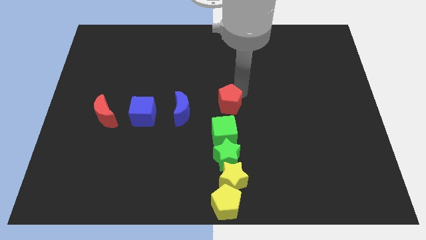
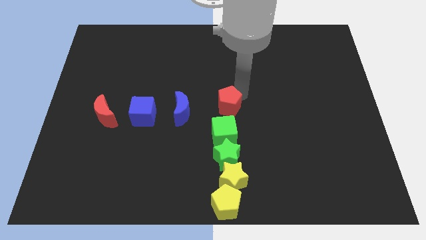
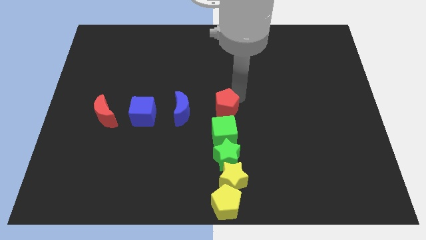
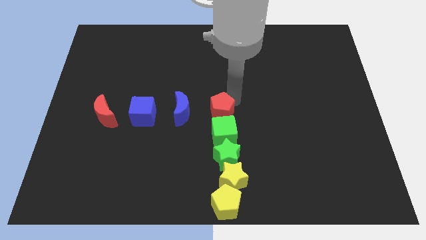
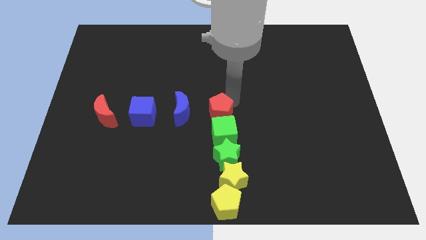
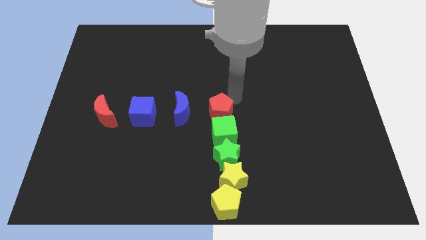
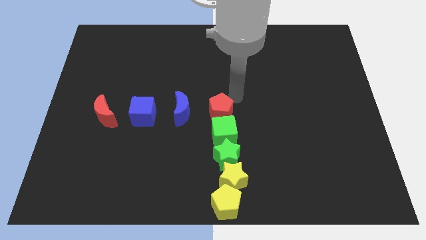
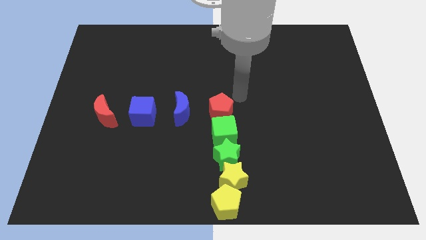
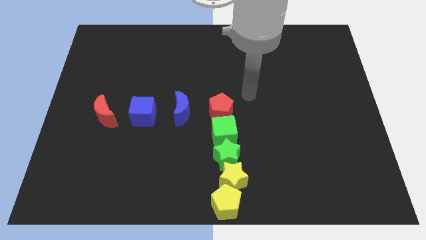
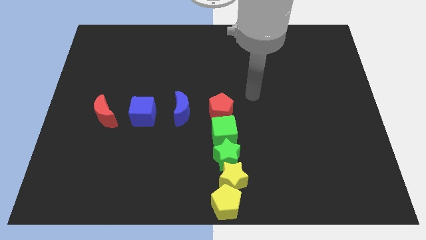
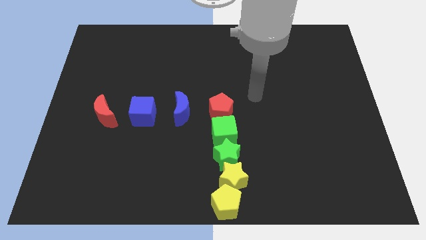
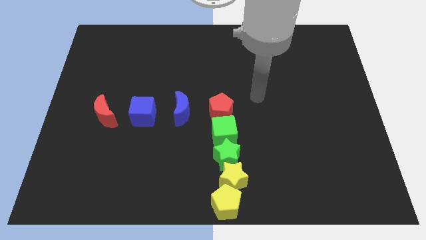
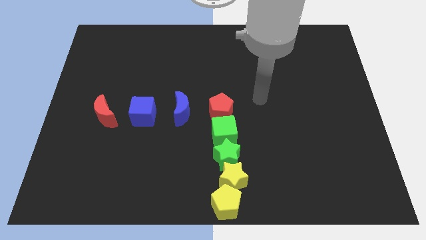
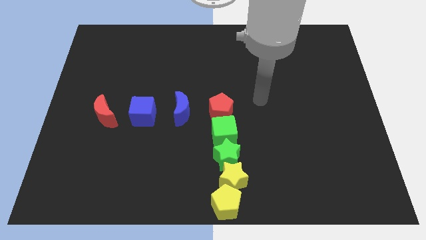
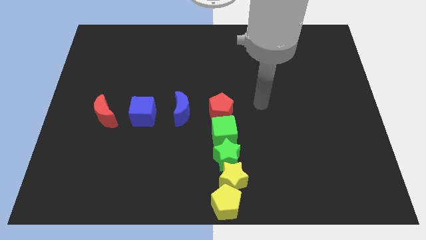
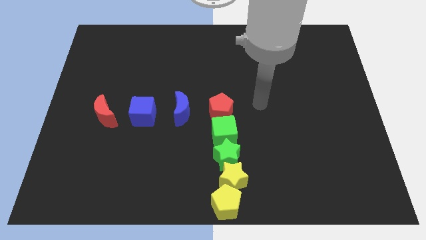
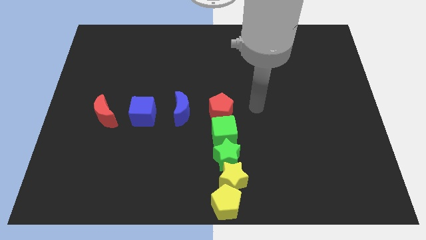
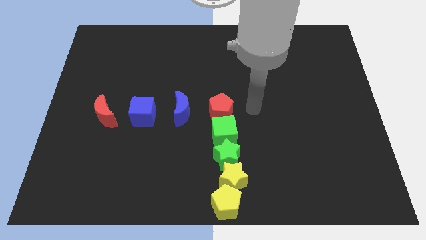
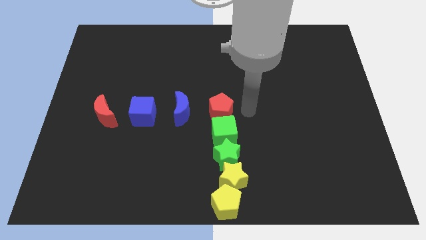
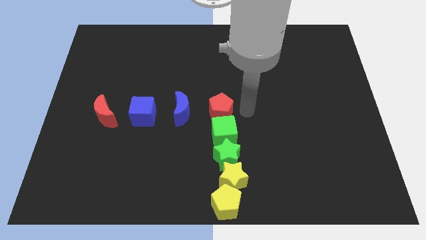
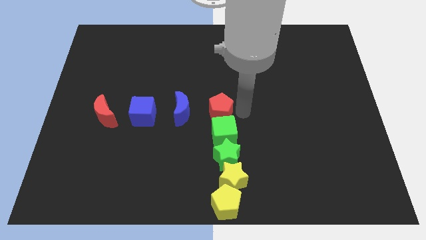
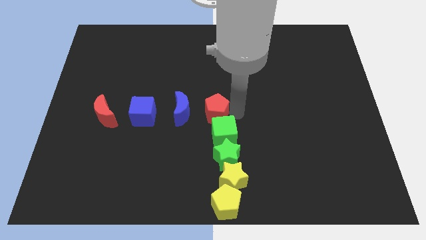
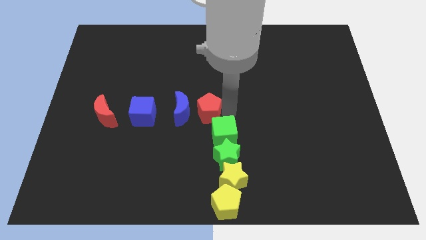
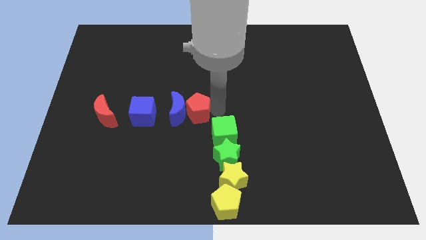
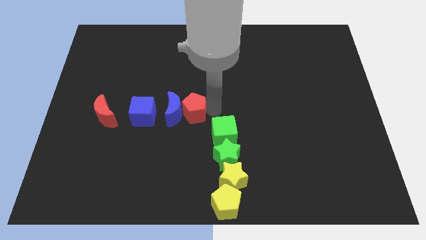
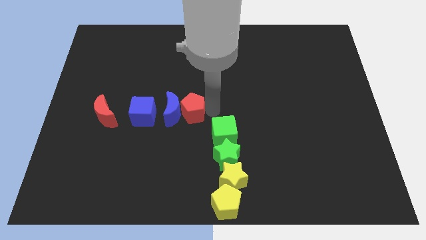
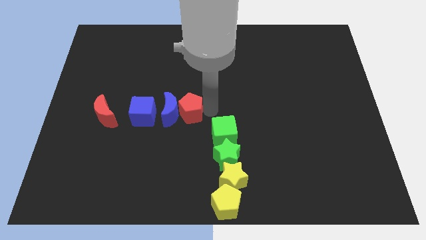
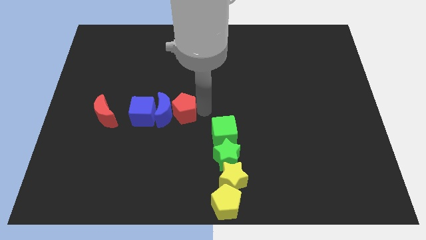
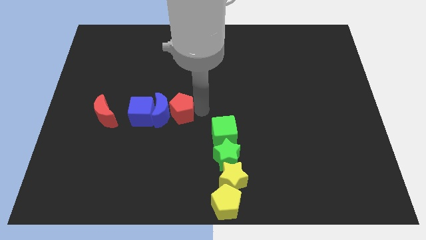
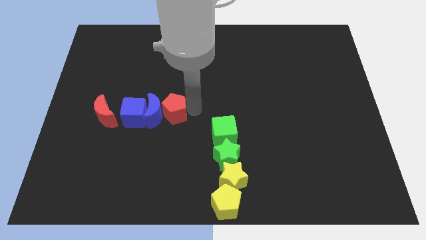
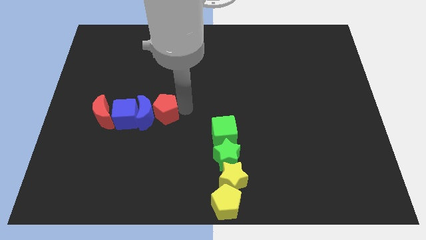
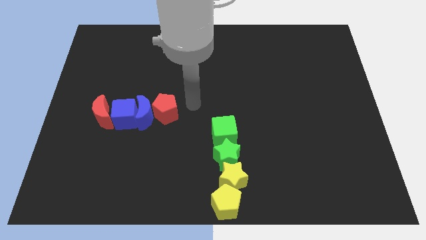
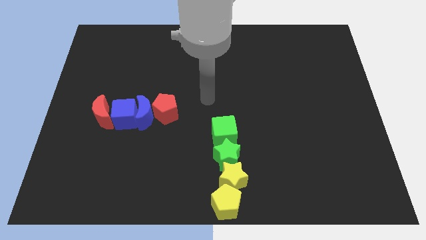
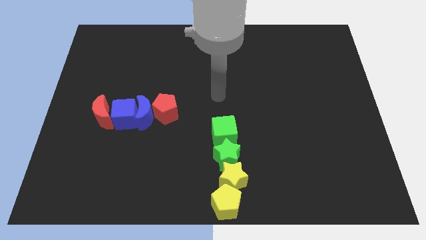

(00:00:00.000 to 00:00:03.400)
push the red pentagon into the right side of the blue crescent

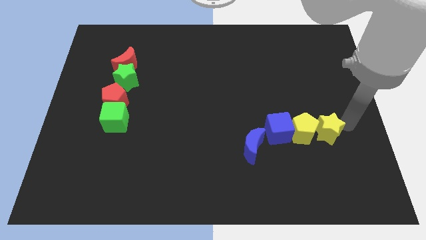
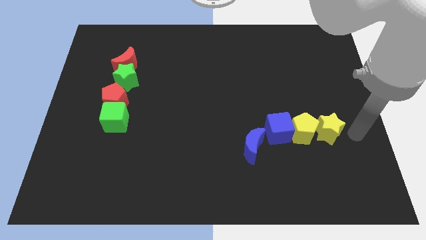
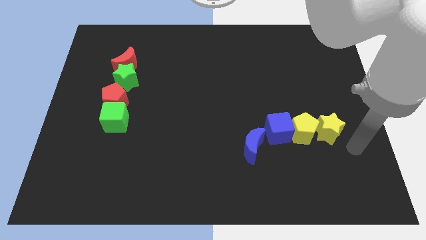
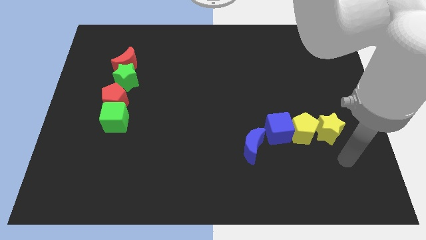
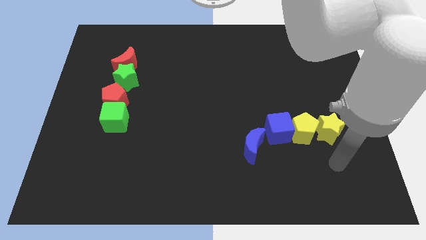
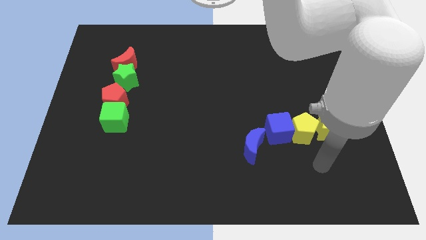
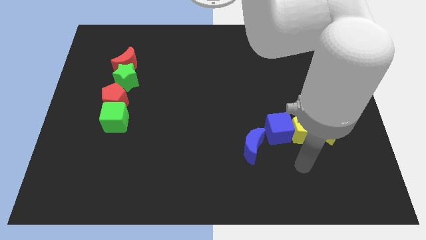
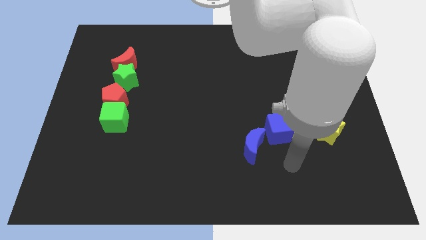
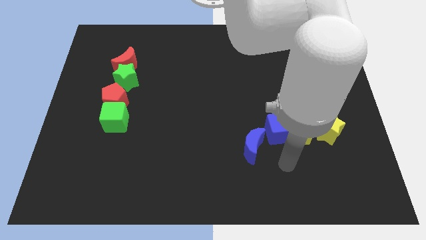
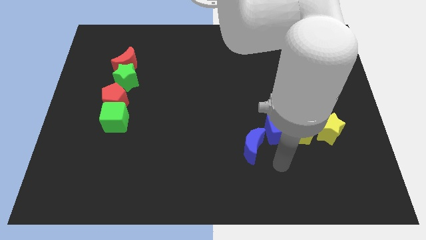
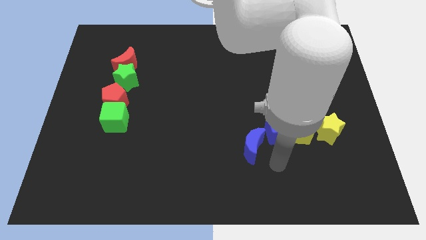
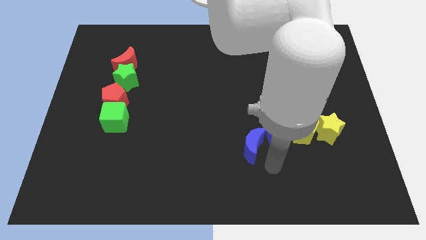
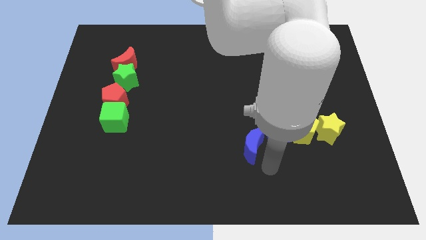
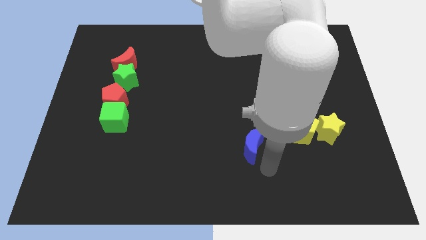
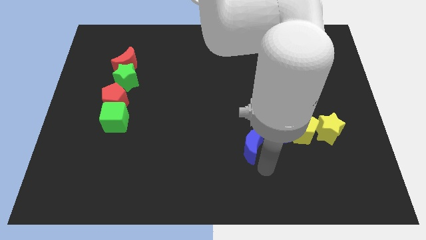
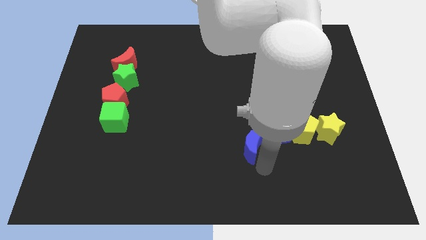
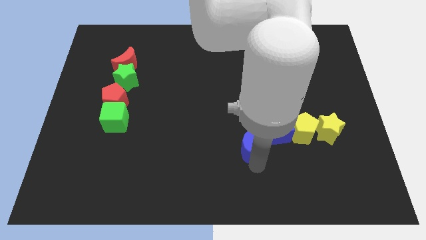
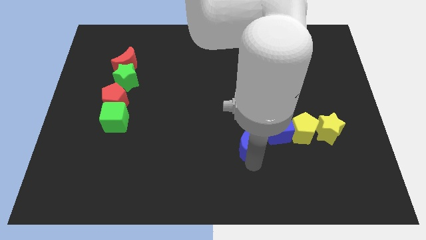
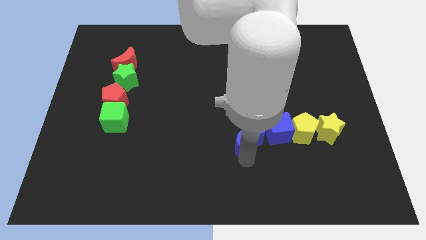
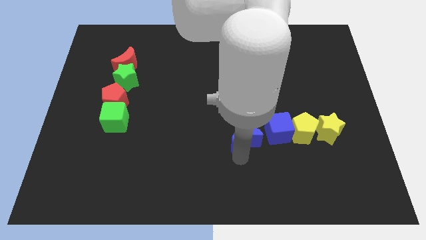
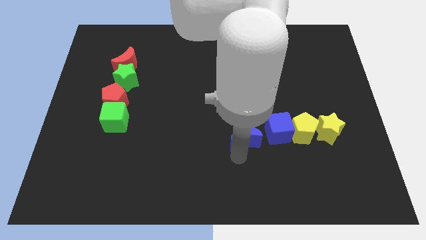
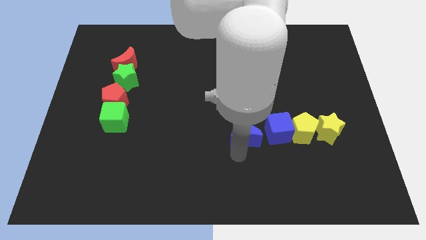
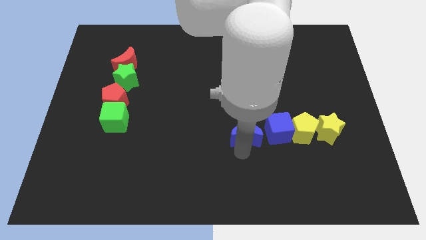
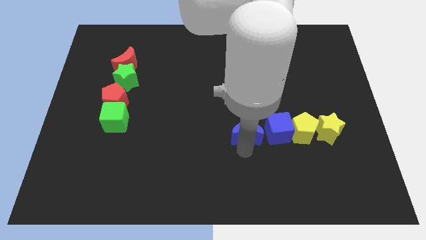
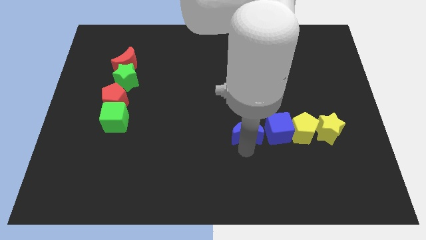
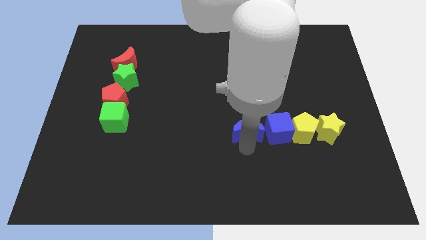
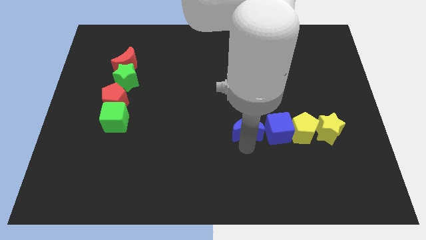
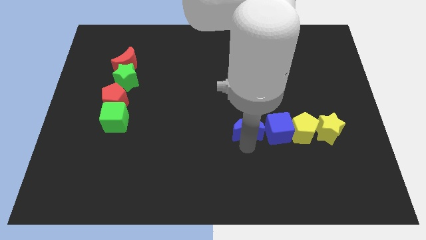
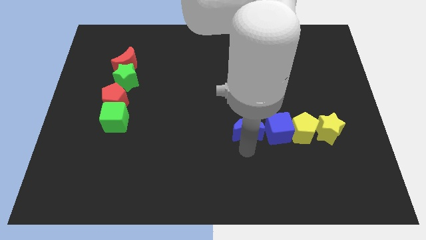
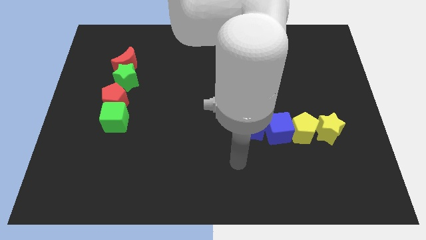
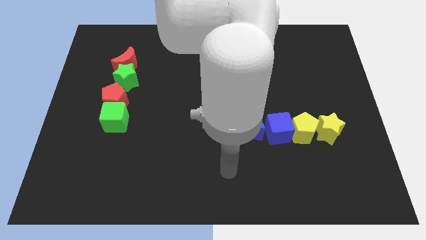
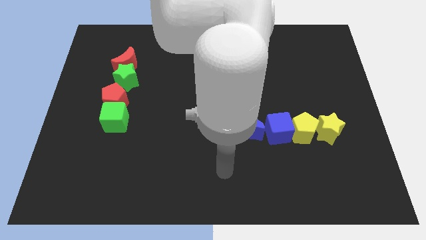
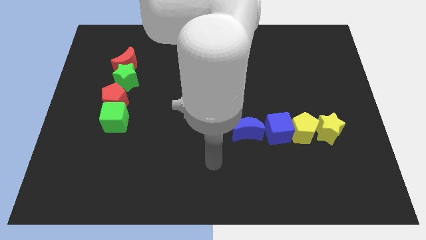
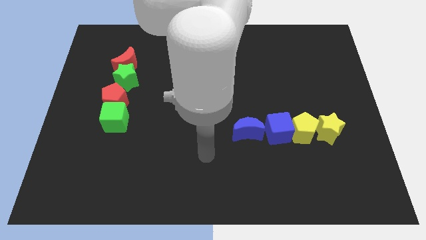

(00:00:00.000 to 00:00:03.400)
move the blue crescent left to the blue cube

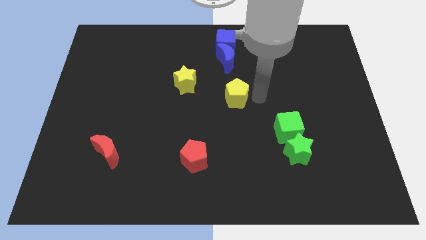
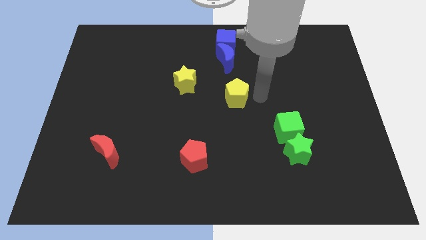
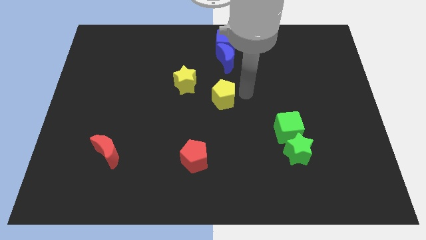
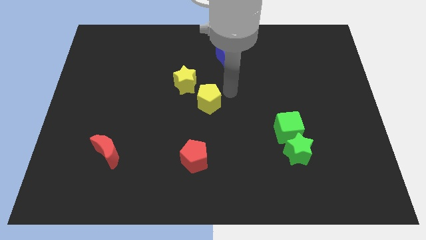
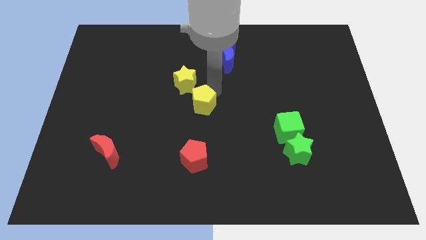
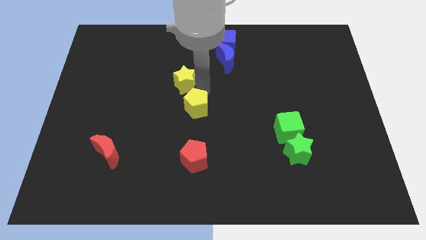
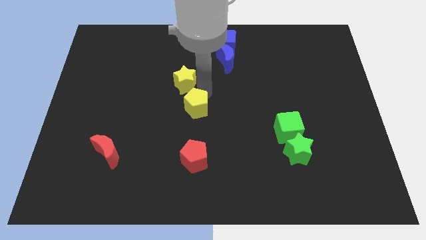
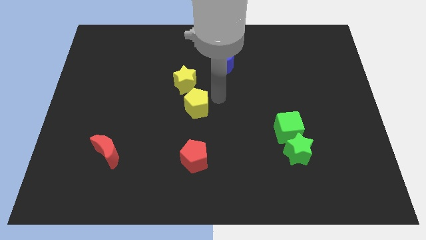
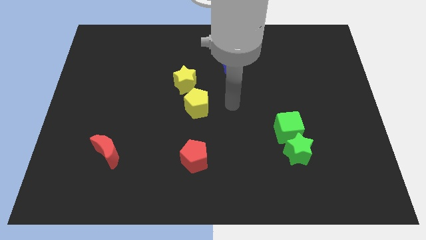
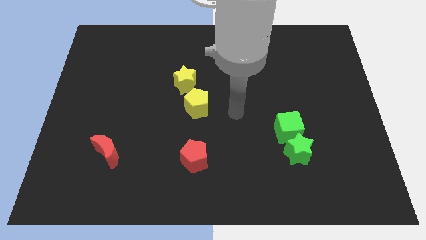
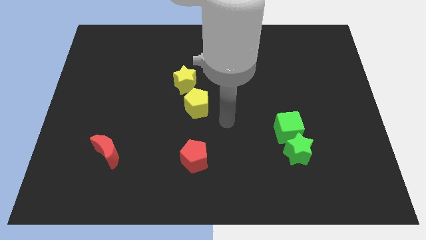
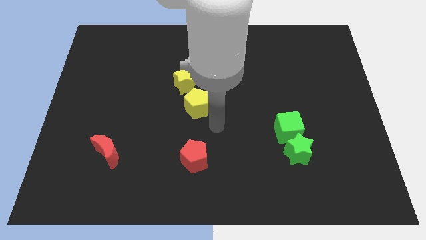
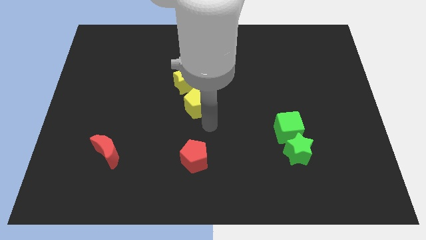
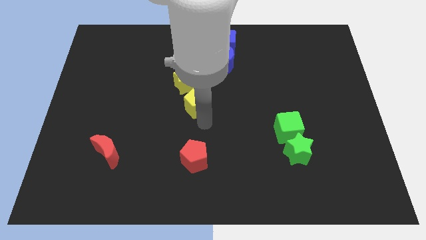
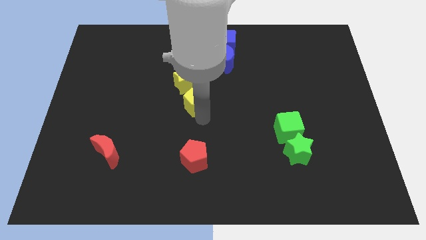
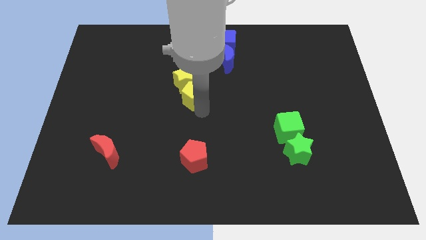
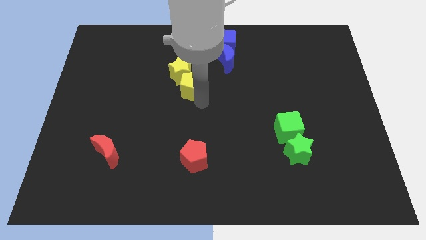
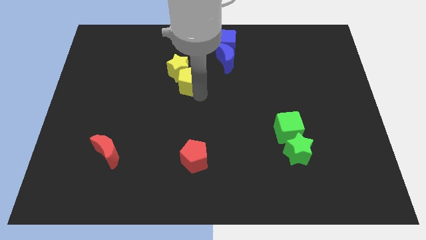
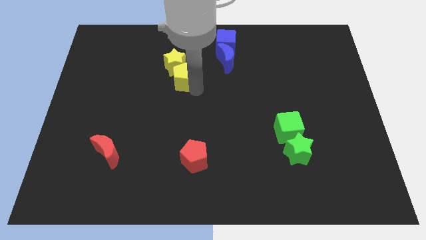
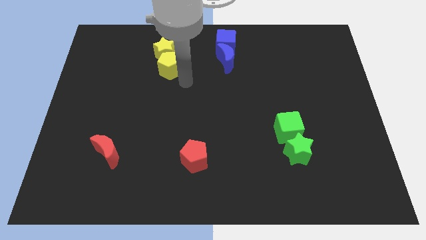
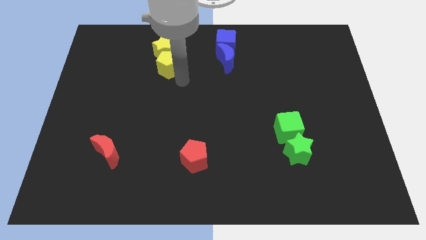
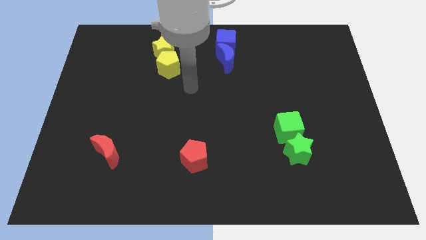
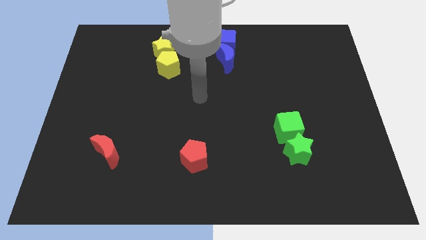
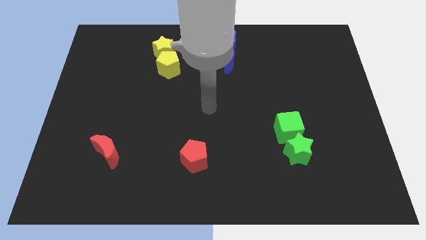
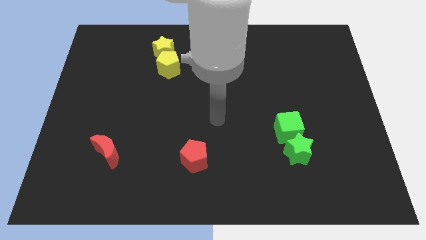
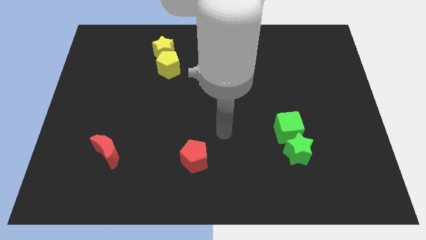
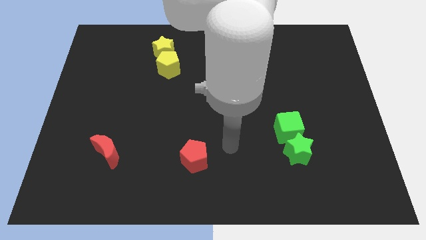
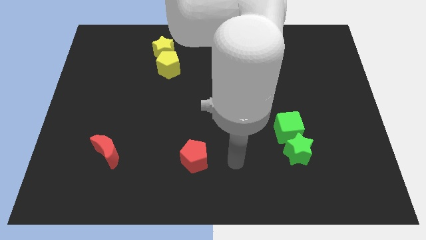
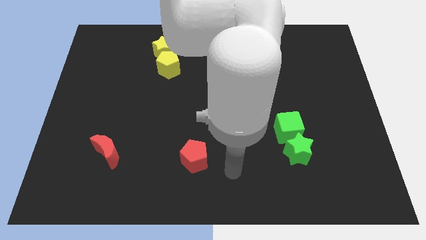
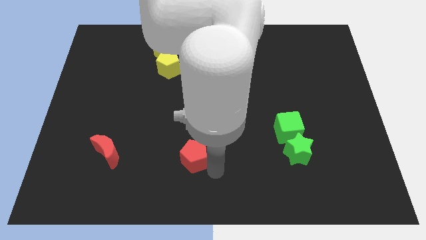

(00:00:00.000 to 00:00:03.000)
push the yellow blocks towards the top left side of the board
